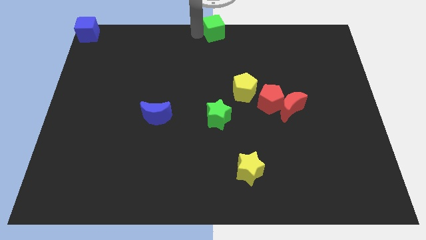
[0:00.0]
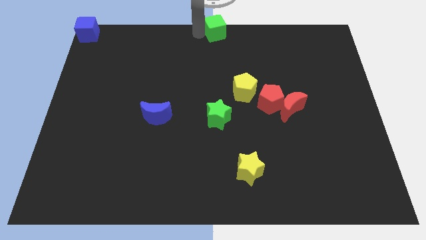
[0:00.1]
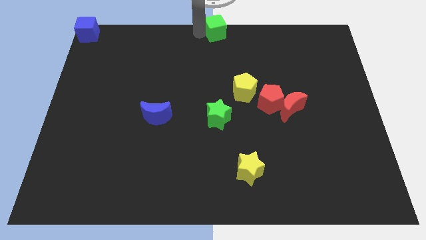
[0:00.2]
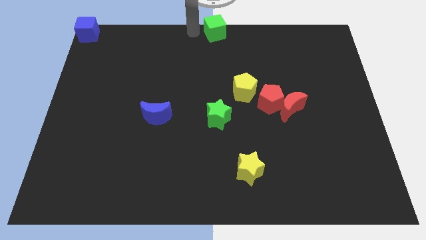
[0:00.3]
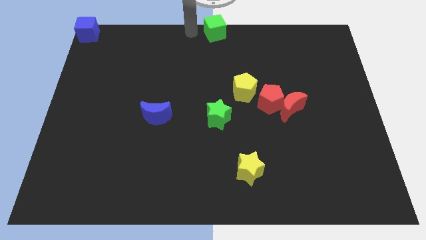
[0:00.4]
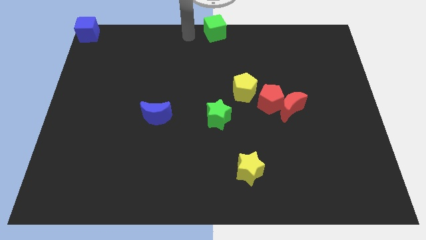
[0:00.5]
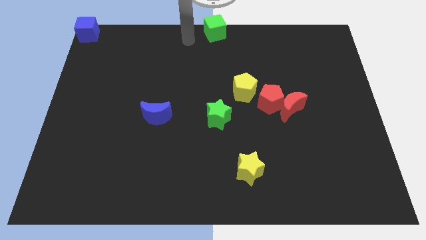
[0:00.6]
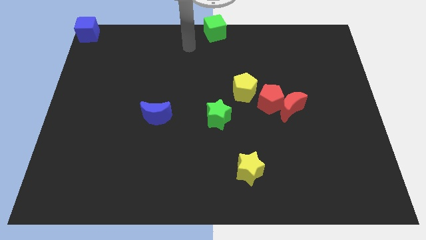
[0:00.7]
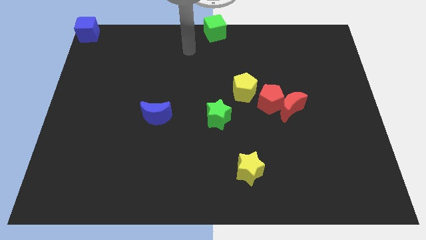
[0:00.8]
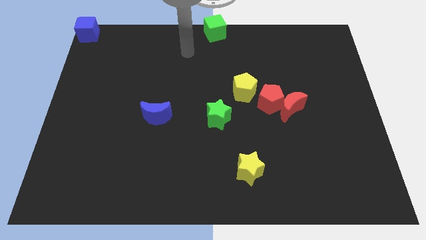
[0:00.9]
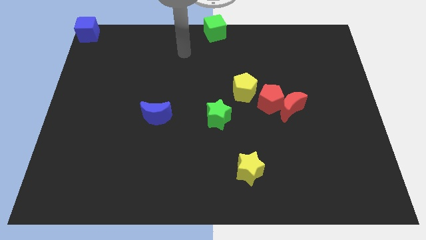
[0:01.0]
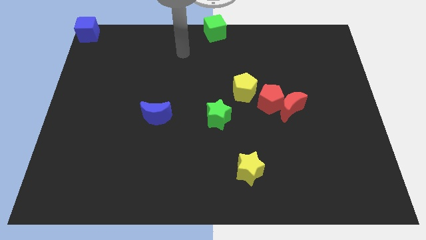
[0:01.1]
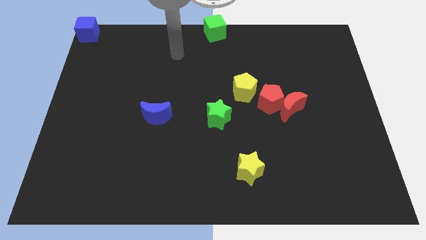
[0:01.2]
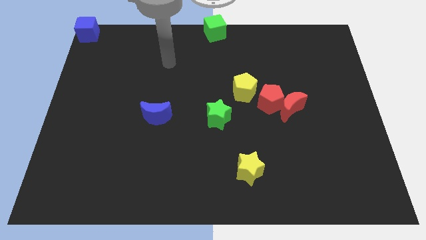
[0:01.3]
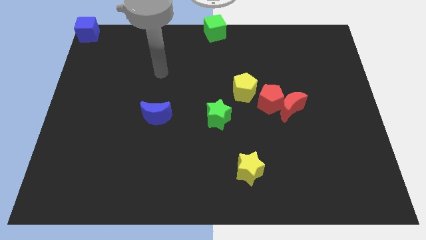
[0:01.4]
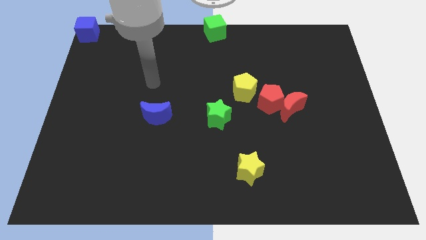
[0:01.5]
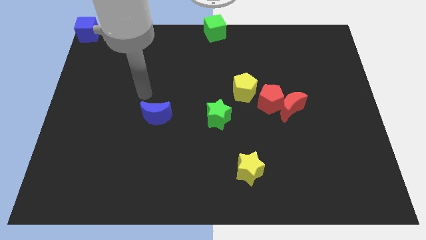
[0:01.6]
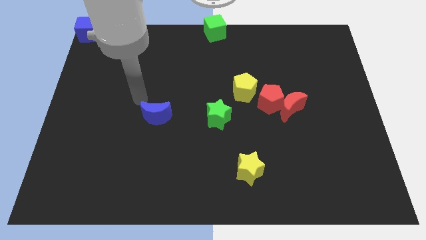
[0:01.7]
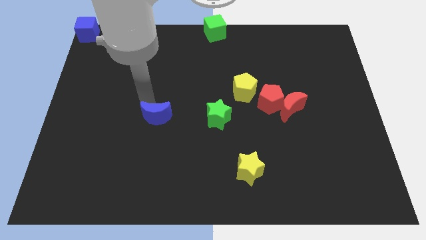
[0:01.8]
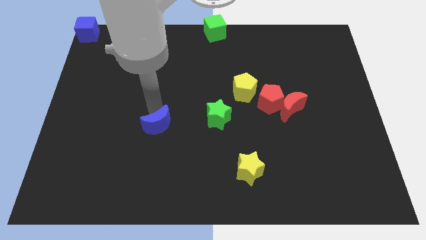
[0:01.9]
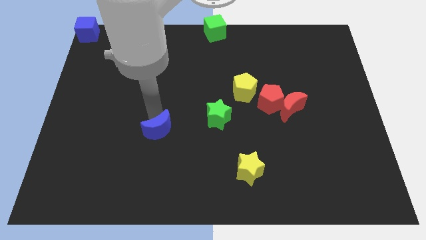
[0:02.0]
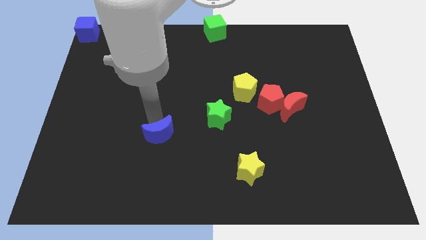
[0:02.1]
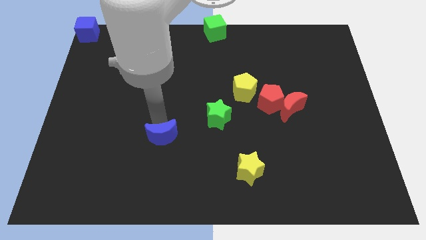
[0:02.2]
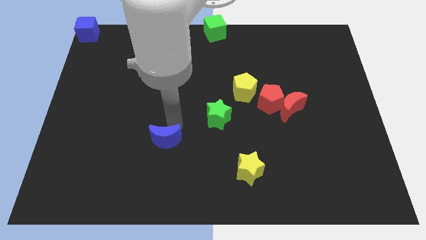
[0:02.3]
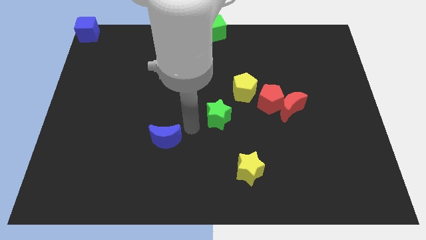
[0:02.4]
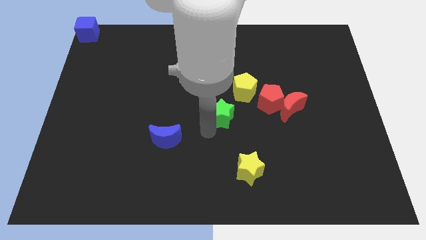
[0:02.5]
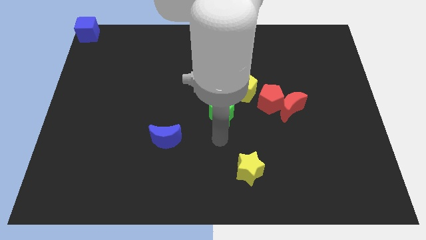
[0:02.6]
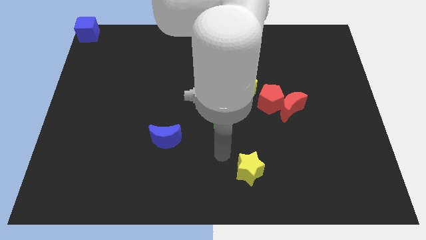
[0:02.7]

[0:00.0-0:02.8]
push the blue moon downward

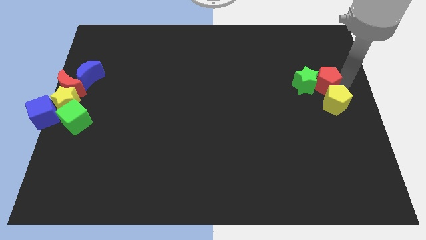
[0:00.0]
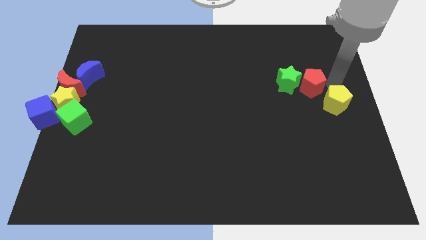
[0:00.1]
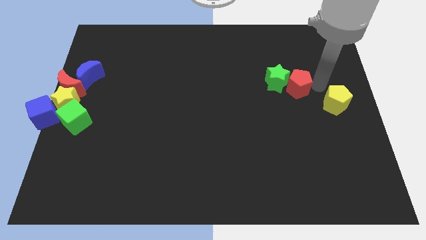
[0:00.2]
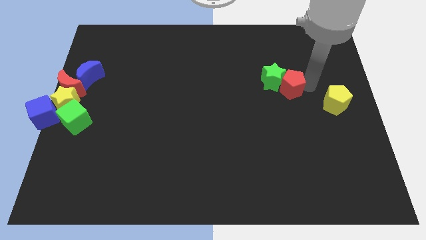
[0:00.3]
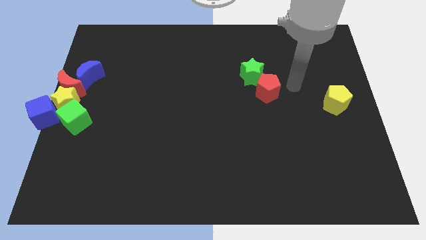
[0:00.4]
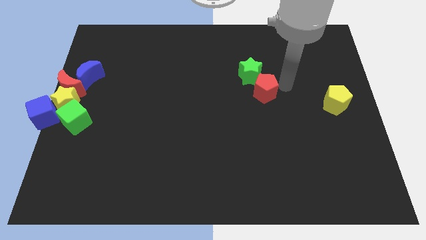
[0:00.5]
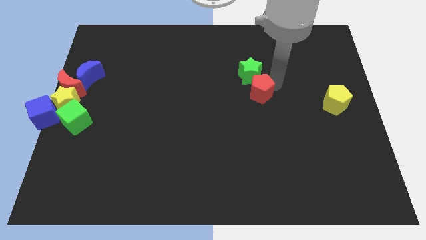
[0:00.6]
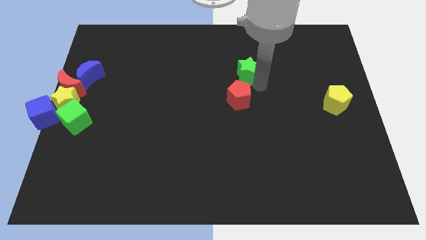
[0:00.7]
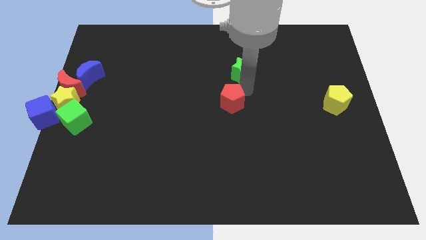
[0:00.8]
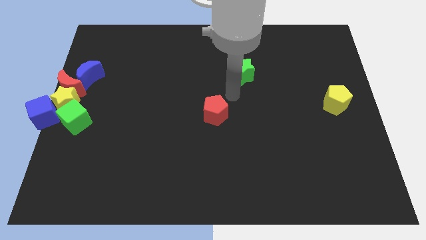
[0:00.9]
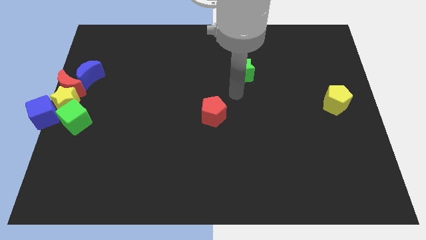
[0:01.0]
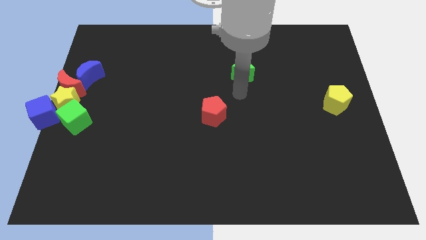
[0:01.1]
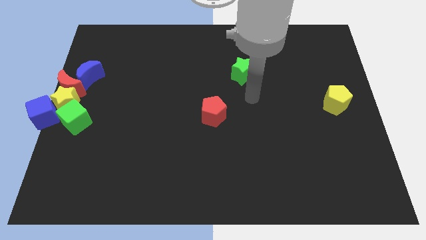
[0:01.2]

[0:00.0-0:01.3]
push the red pentagon away from the green star

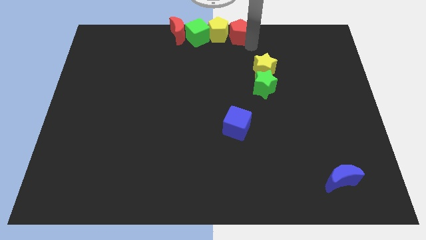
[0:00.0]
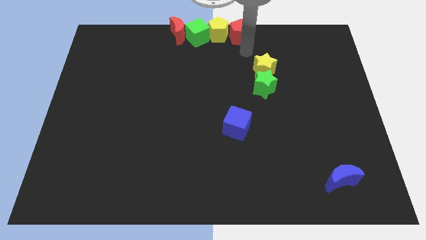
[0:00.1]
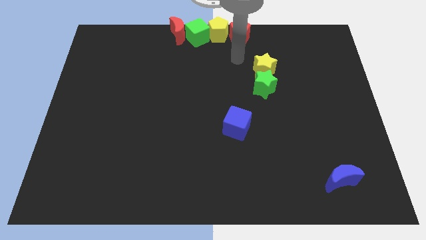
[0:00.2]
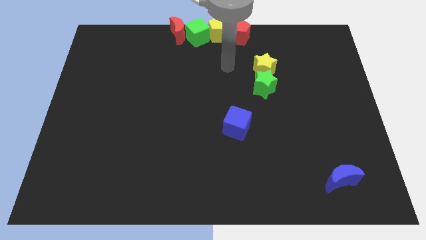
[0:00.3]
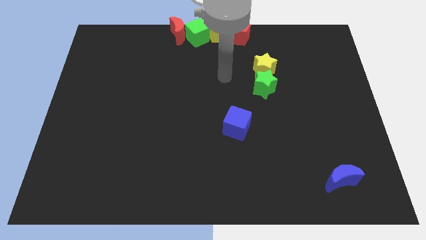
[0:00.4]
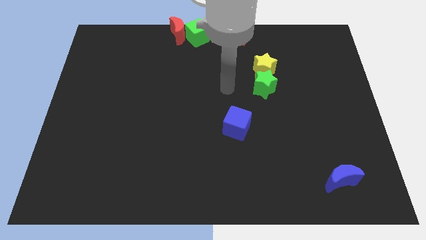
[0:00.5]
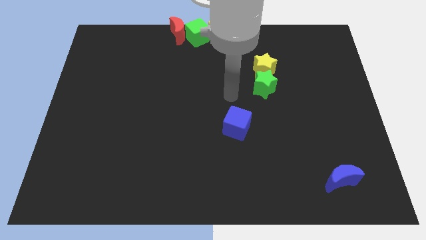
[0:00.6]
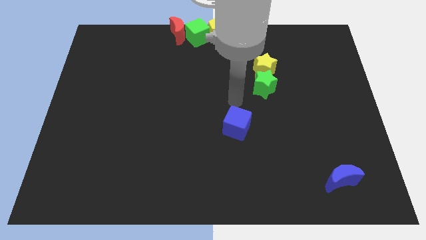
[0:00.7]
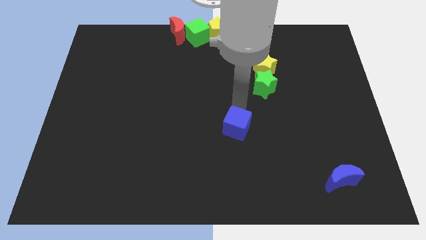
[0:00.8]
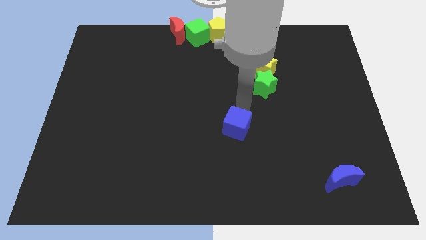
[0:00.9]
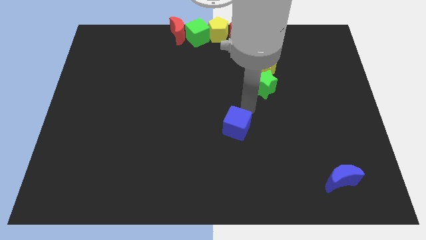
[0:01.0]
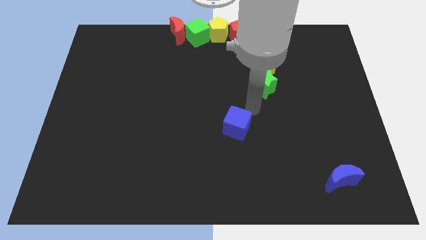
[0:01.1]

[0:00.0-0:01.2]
place your arm in between the green star and blue cube

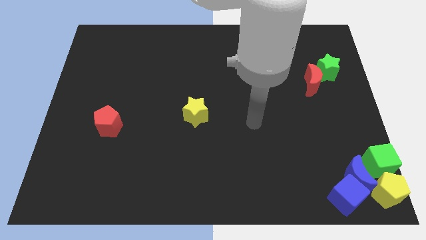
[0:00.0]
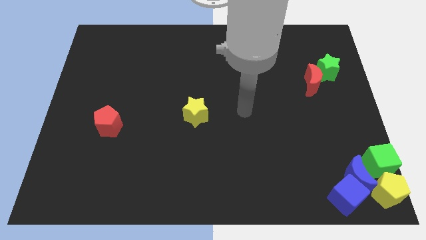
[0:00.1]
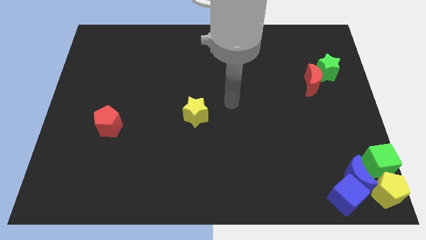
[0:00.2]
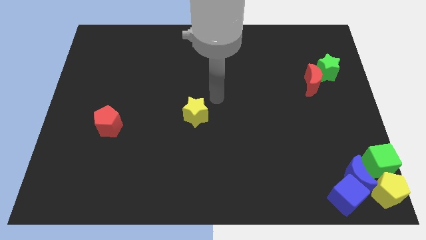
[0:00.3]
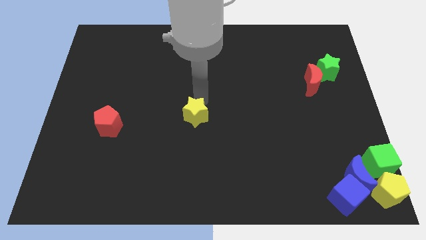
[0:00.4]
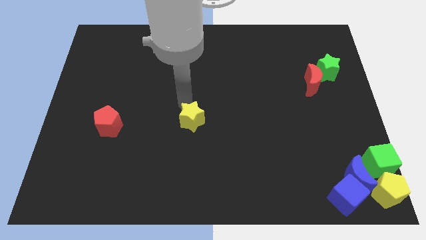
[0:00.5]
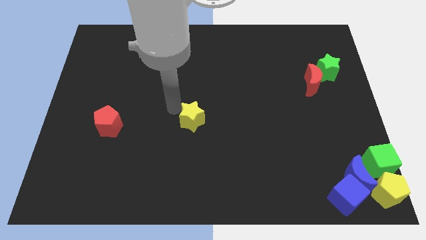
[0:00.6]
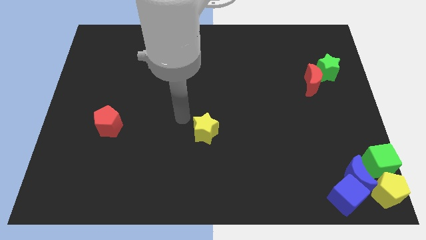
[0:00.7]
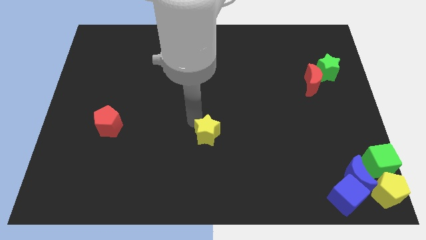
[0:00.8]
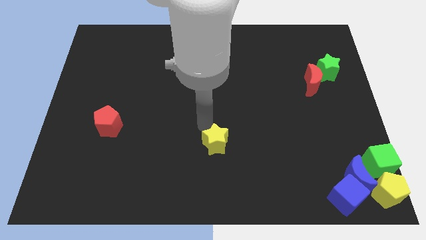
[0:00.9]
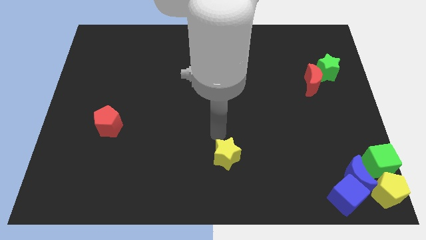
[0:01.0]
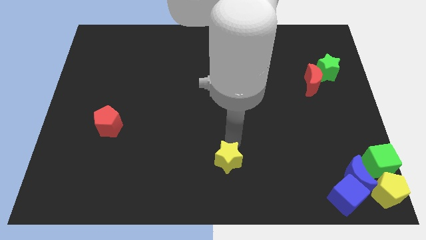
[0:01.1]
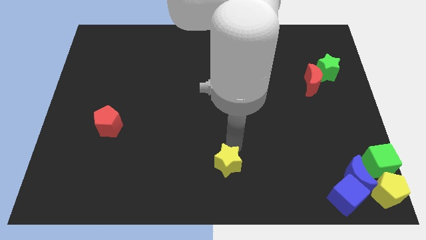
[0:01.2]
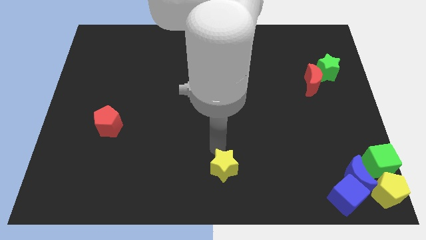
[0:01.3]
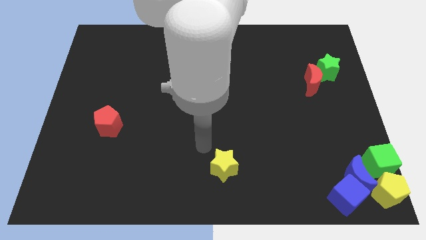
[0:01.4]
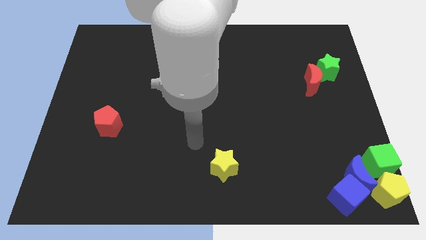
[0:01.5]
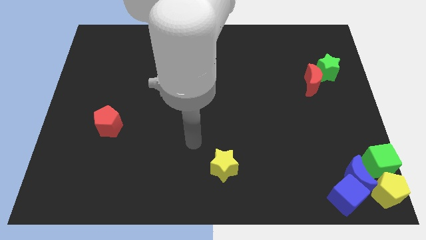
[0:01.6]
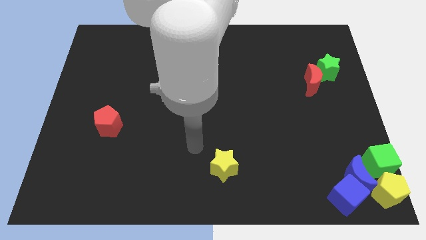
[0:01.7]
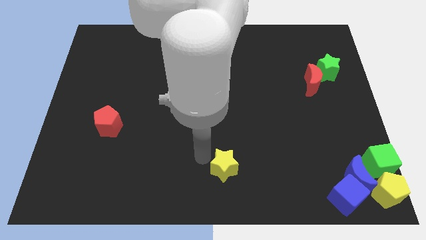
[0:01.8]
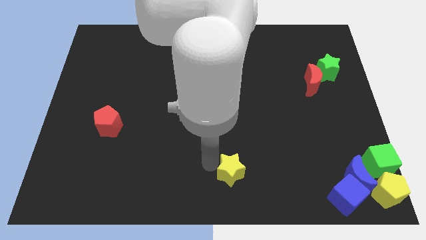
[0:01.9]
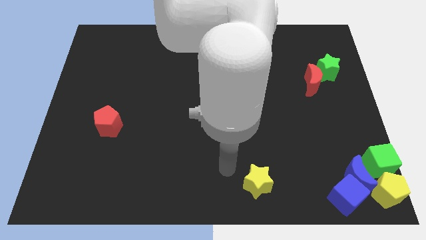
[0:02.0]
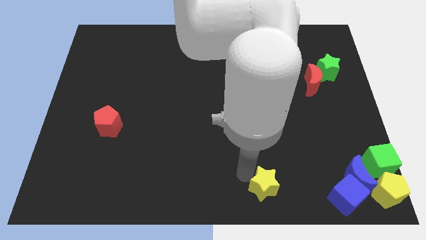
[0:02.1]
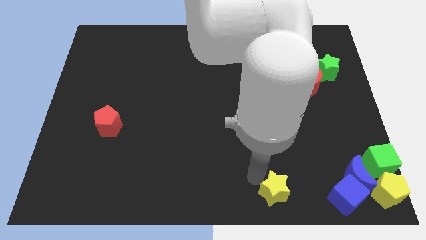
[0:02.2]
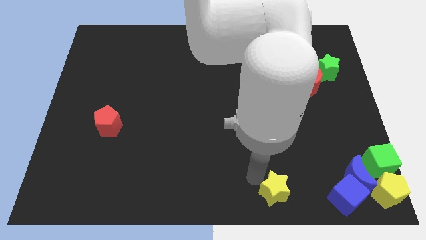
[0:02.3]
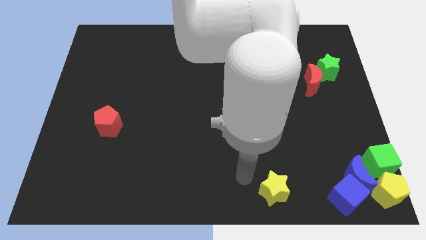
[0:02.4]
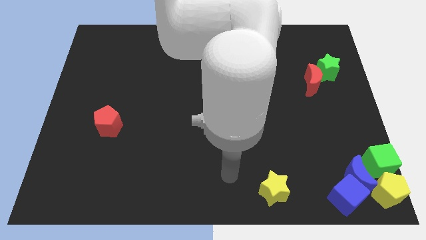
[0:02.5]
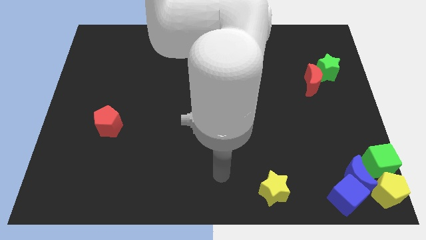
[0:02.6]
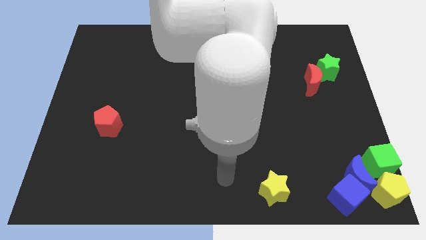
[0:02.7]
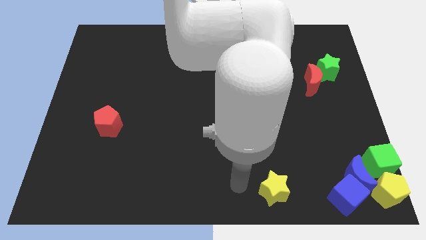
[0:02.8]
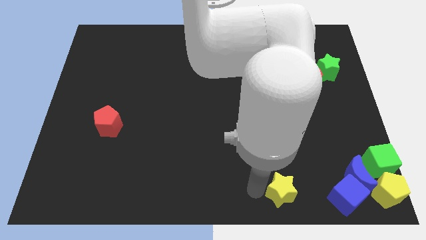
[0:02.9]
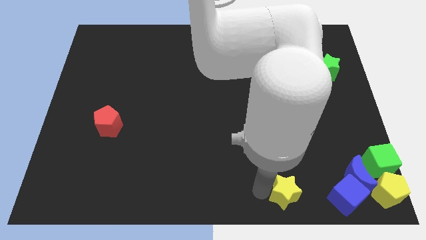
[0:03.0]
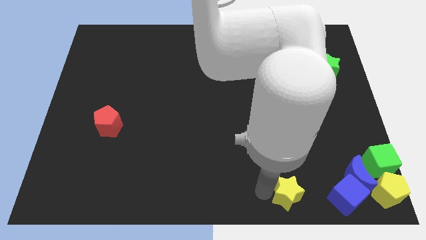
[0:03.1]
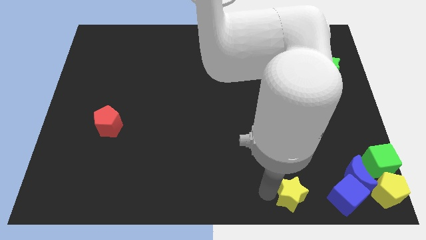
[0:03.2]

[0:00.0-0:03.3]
drag the yellow star to the left side of the blue cube

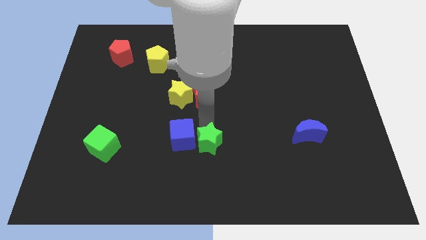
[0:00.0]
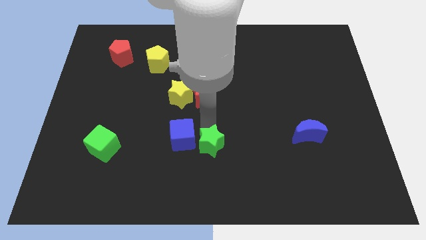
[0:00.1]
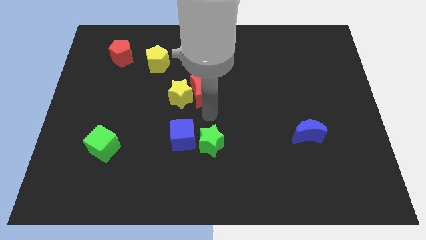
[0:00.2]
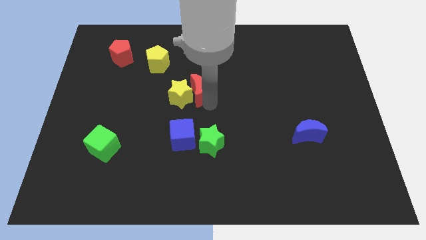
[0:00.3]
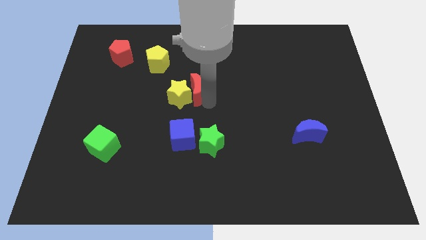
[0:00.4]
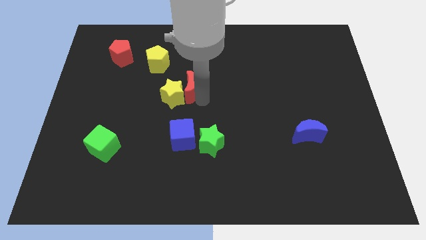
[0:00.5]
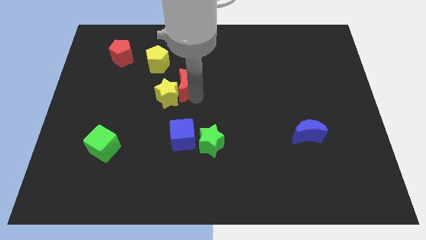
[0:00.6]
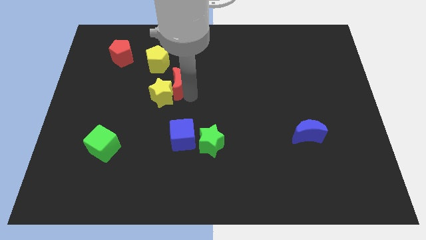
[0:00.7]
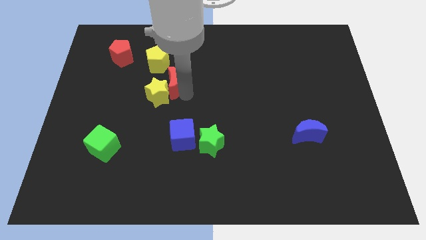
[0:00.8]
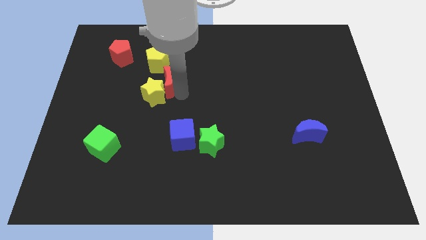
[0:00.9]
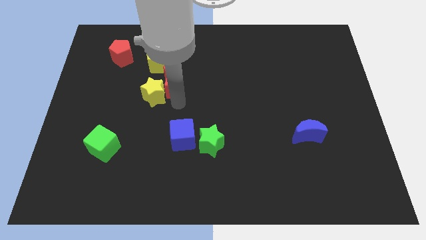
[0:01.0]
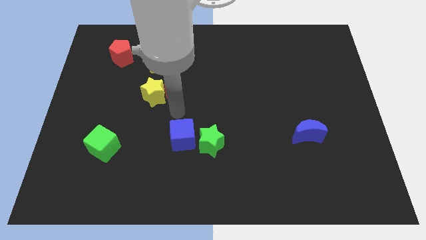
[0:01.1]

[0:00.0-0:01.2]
move the red moon and yellow star to the bottom side of the yellow pentagon
